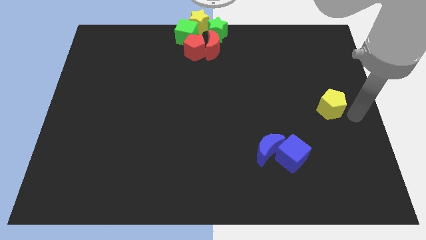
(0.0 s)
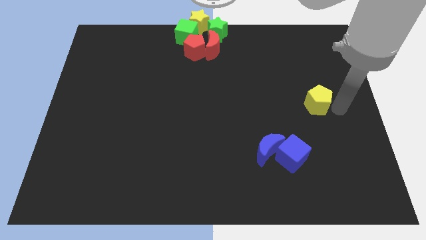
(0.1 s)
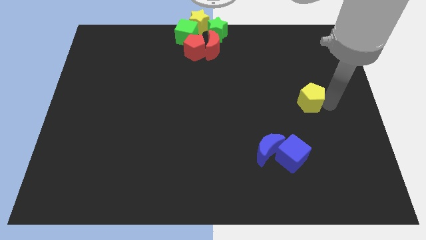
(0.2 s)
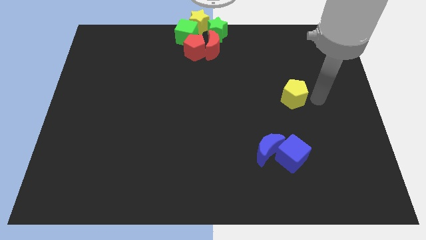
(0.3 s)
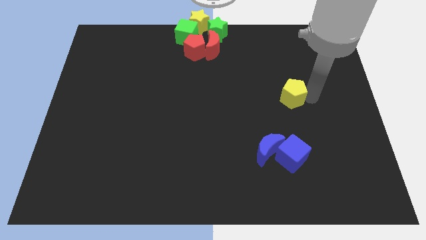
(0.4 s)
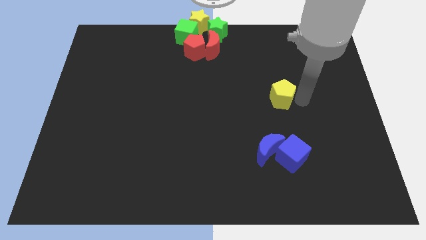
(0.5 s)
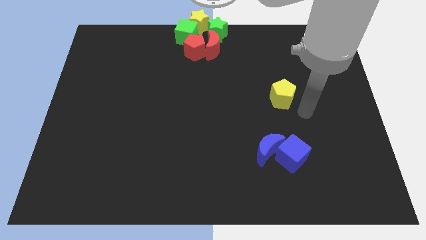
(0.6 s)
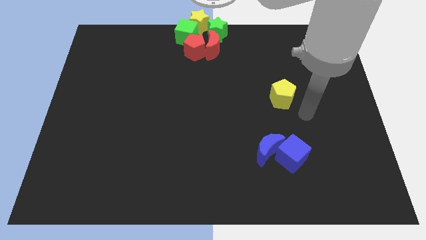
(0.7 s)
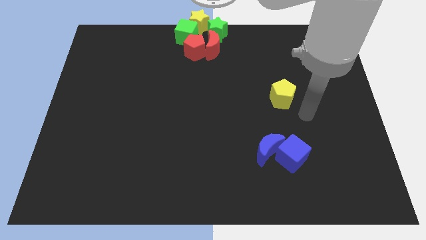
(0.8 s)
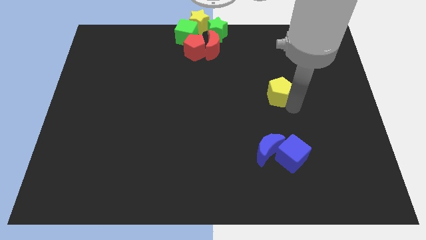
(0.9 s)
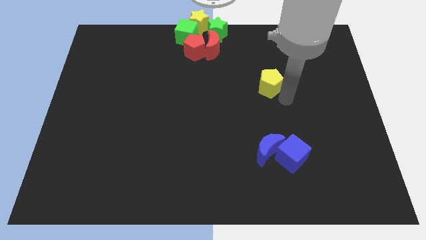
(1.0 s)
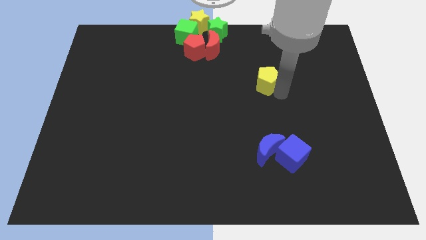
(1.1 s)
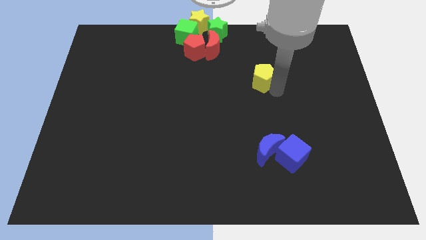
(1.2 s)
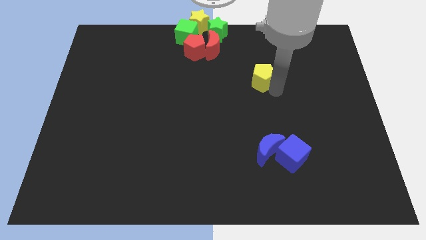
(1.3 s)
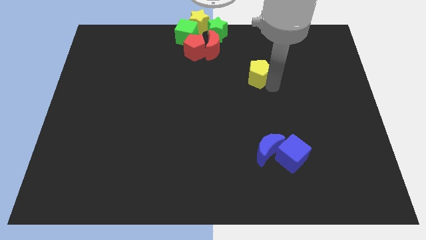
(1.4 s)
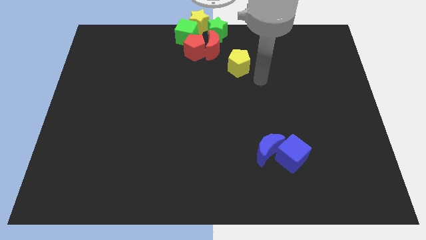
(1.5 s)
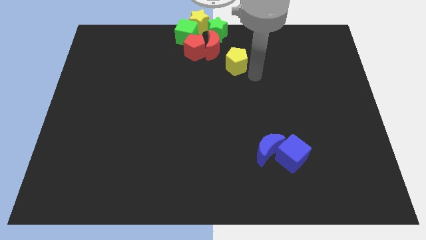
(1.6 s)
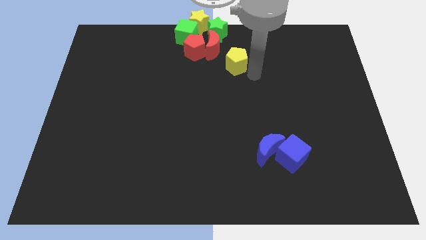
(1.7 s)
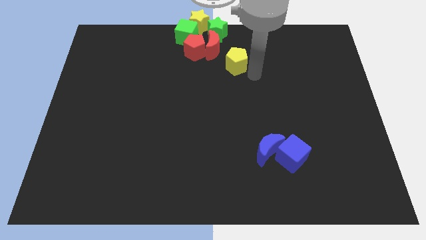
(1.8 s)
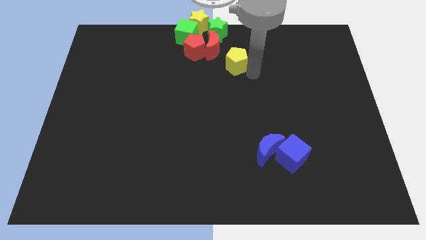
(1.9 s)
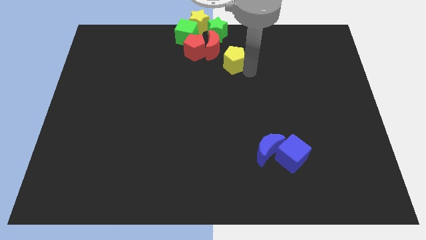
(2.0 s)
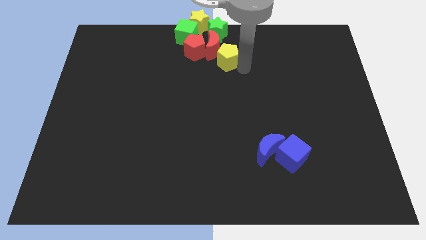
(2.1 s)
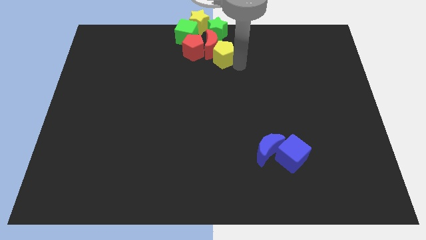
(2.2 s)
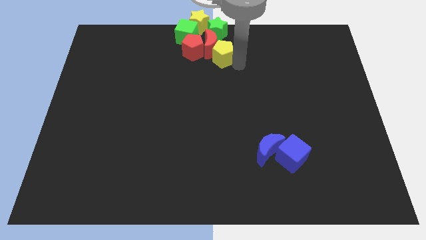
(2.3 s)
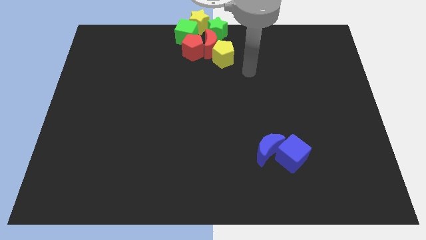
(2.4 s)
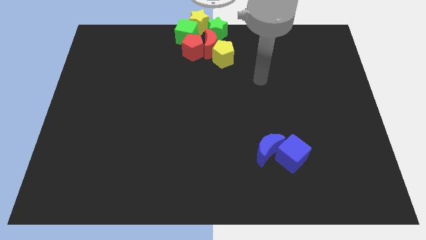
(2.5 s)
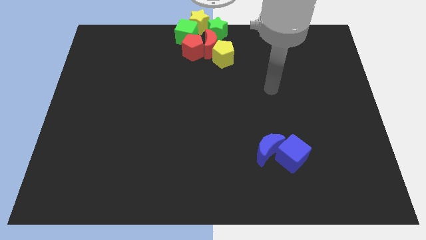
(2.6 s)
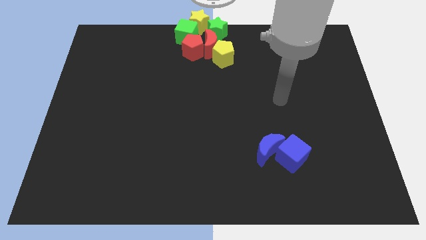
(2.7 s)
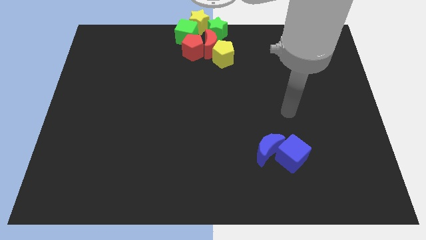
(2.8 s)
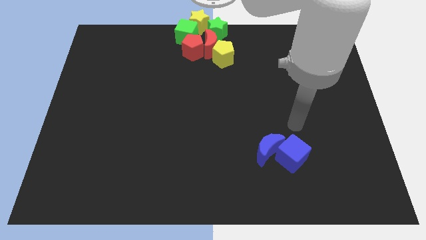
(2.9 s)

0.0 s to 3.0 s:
push the yellow pentagon into the red crescent diagonally

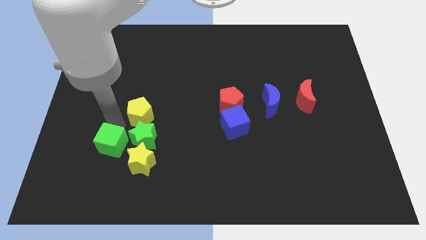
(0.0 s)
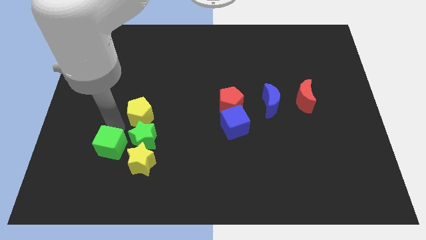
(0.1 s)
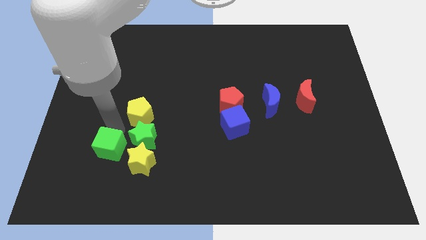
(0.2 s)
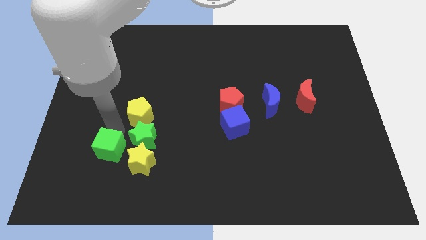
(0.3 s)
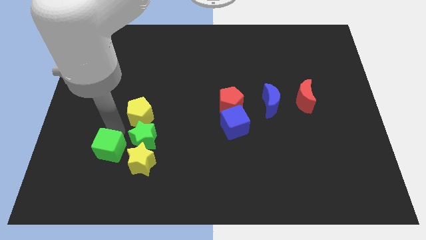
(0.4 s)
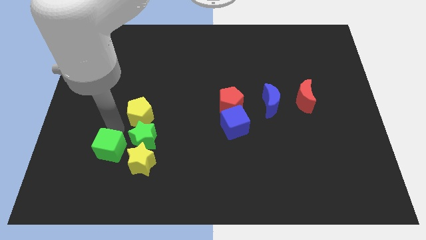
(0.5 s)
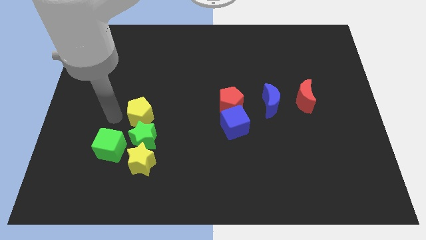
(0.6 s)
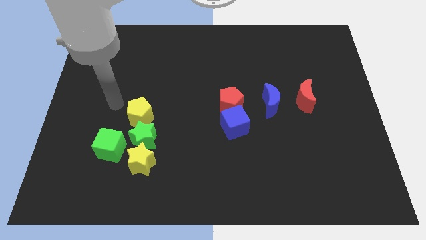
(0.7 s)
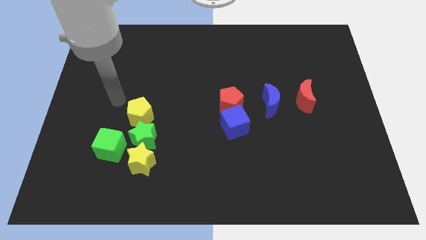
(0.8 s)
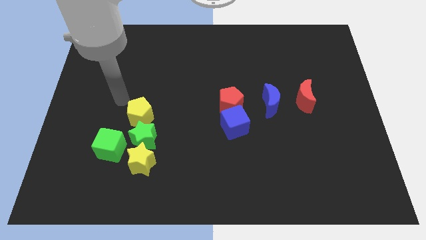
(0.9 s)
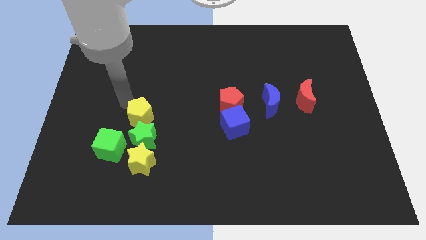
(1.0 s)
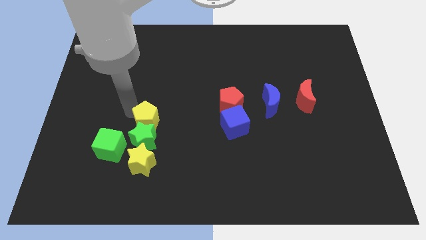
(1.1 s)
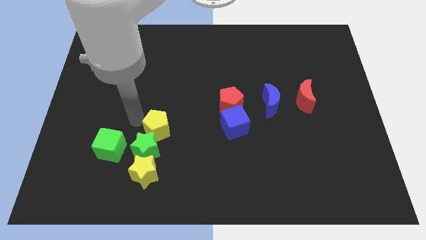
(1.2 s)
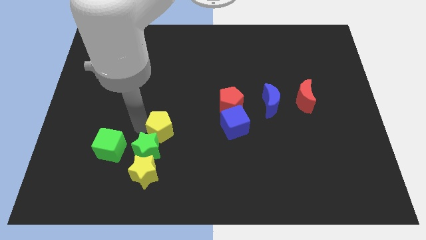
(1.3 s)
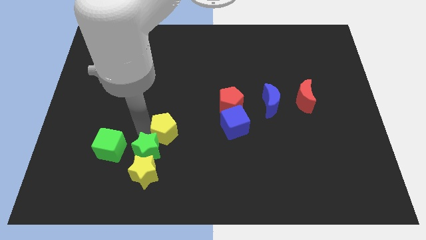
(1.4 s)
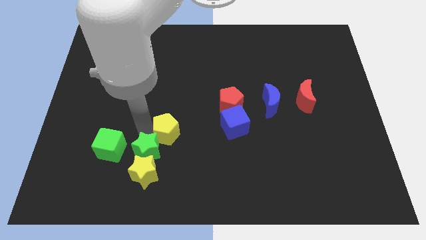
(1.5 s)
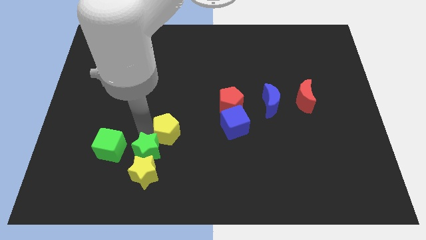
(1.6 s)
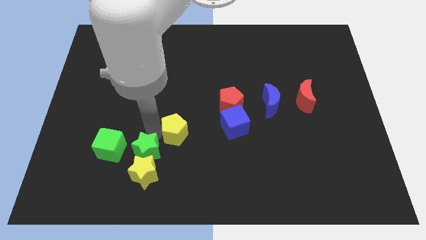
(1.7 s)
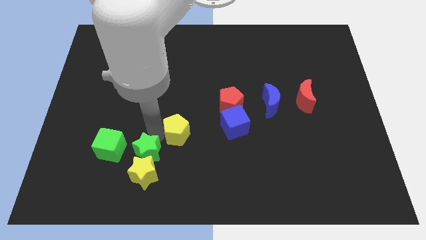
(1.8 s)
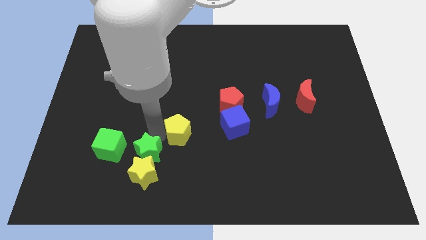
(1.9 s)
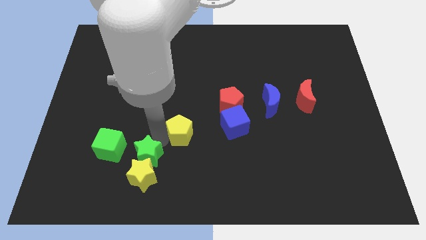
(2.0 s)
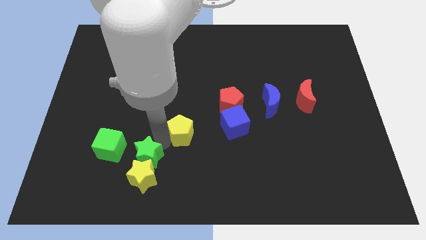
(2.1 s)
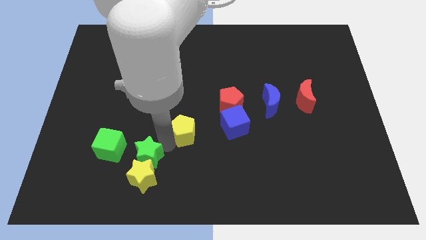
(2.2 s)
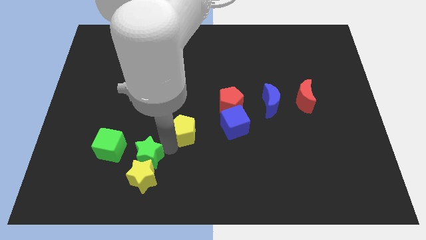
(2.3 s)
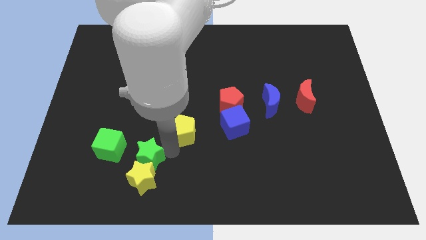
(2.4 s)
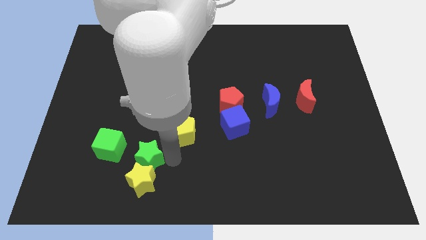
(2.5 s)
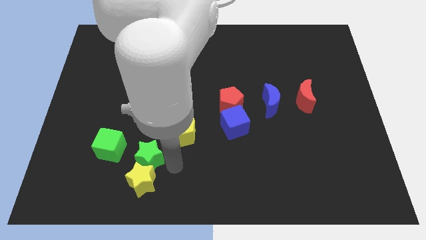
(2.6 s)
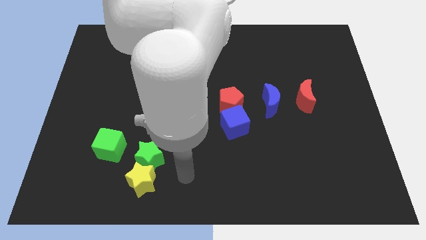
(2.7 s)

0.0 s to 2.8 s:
separate yellow pentagon from green star

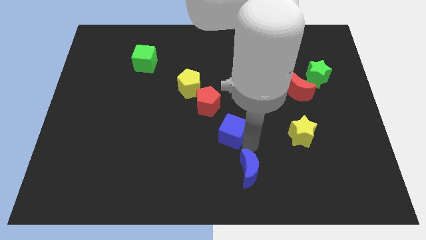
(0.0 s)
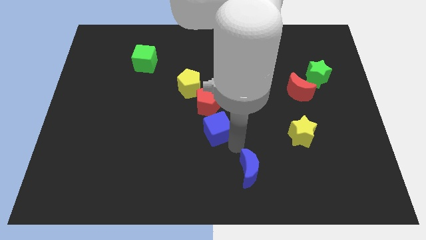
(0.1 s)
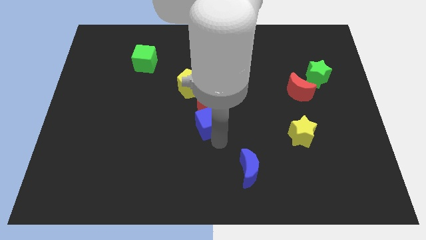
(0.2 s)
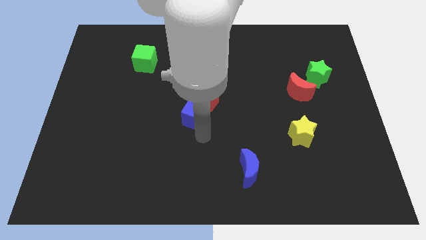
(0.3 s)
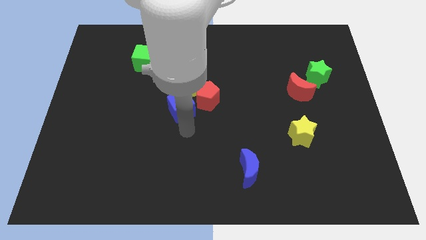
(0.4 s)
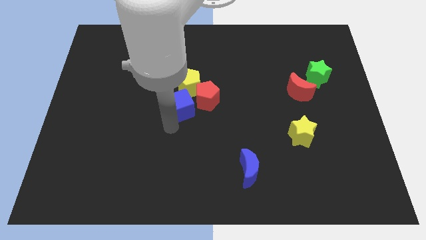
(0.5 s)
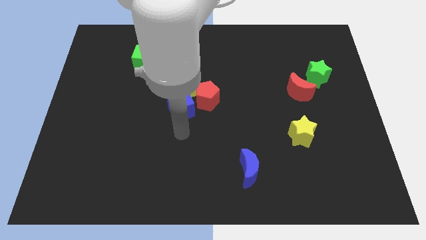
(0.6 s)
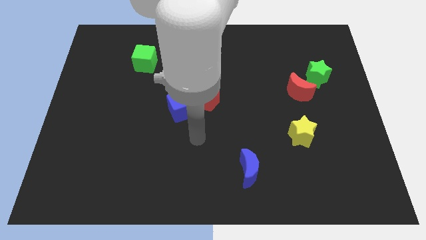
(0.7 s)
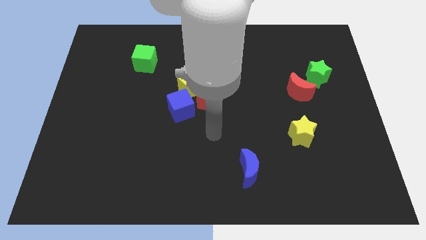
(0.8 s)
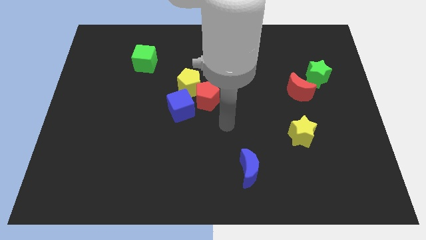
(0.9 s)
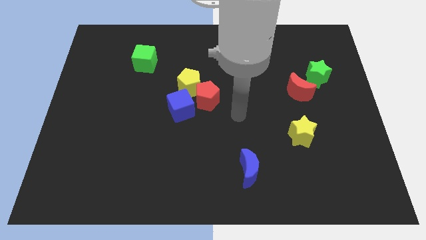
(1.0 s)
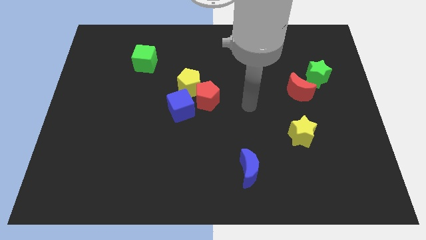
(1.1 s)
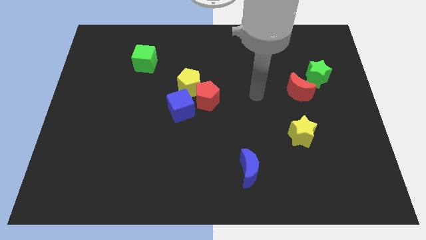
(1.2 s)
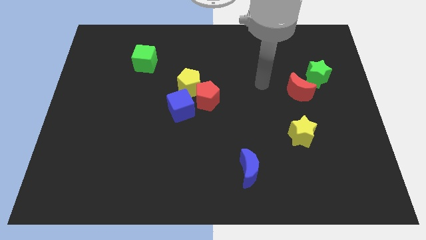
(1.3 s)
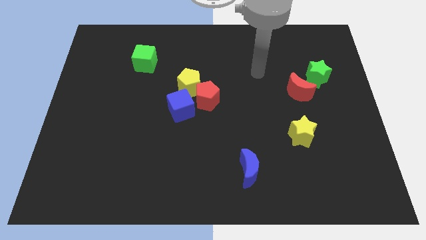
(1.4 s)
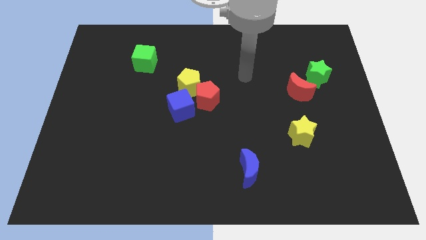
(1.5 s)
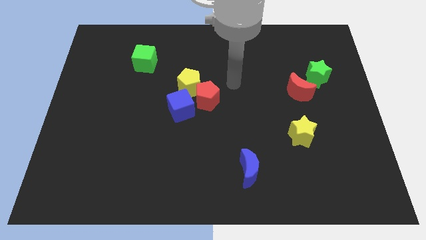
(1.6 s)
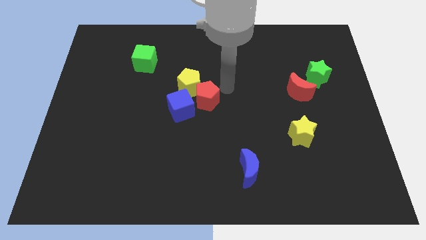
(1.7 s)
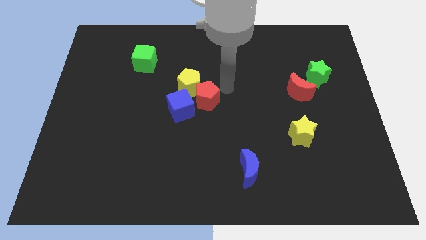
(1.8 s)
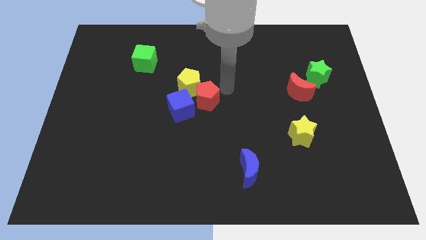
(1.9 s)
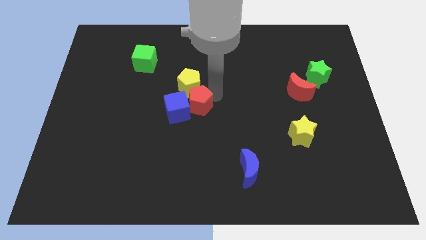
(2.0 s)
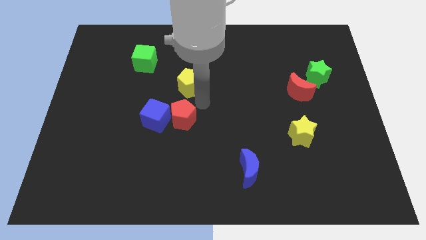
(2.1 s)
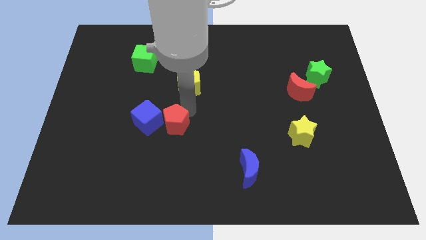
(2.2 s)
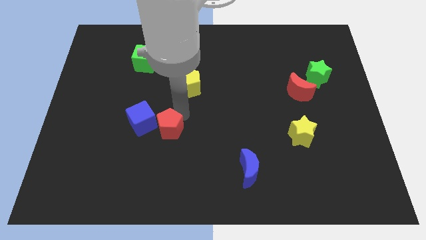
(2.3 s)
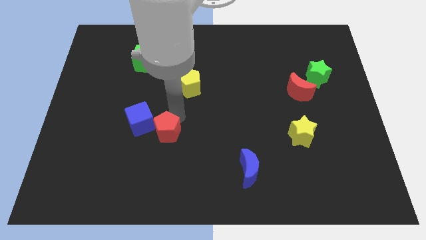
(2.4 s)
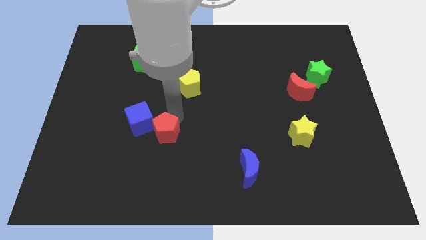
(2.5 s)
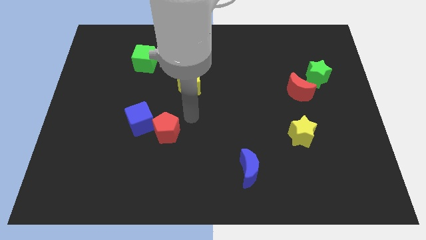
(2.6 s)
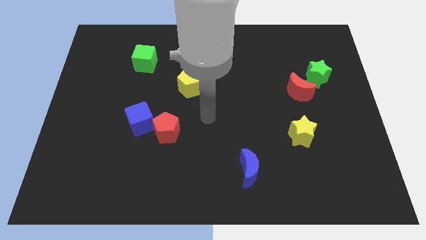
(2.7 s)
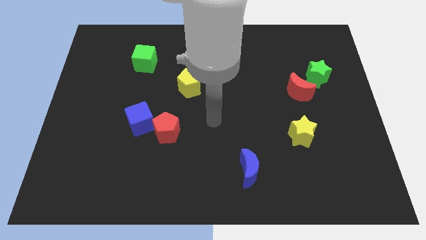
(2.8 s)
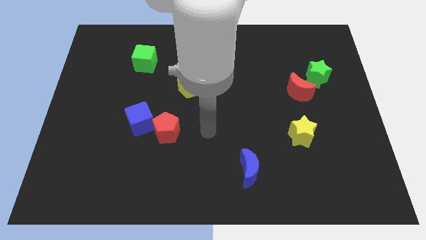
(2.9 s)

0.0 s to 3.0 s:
move the blue cube with red pentagon towards bottom

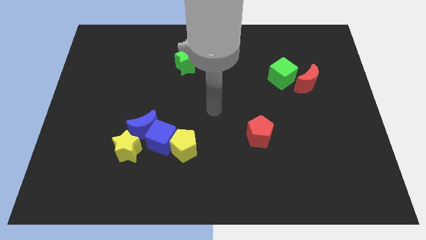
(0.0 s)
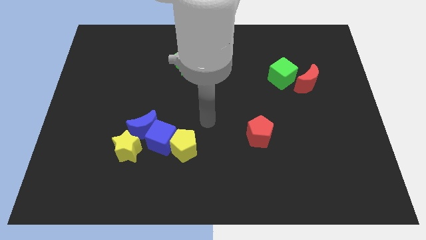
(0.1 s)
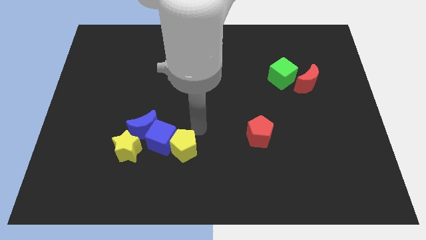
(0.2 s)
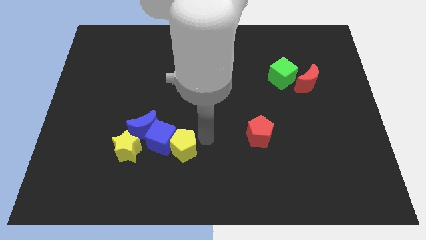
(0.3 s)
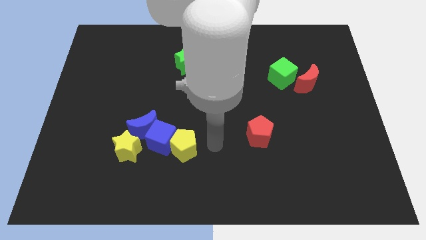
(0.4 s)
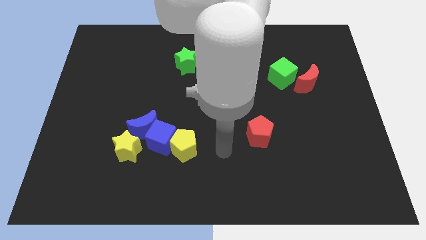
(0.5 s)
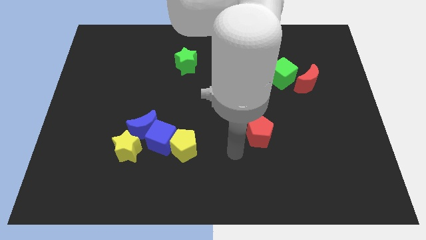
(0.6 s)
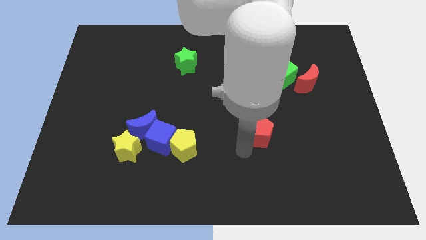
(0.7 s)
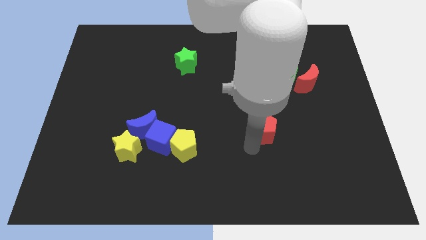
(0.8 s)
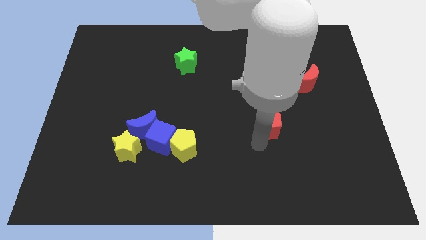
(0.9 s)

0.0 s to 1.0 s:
push red pentagon slightly upwards
